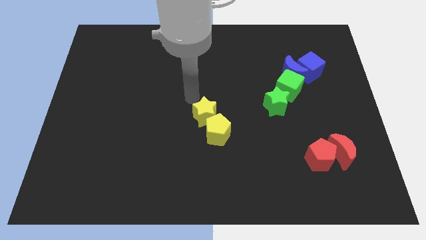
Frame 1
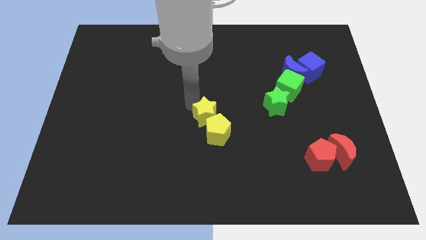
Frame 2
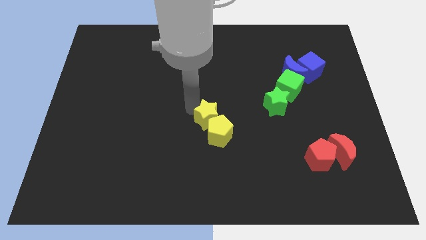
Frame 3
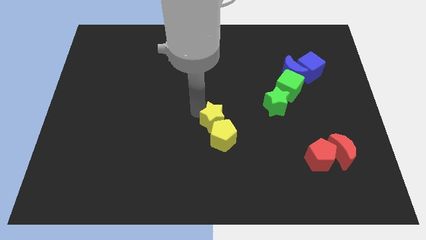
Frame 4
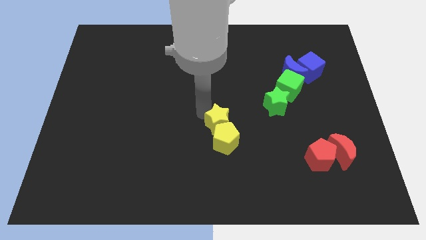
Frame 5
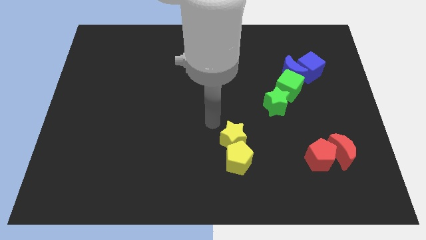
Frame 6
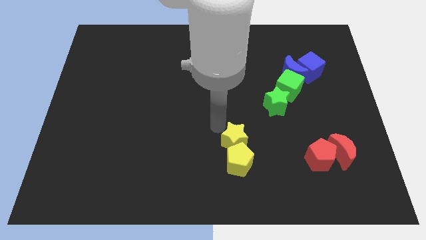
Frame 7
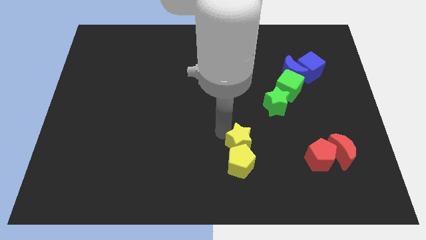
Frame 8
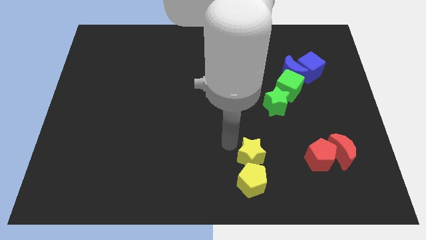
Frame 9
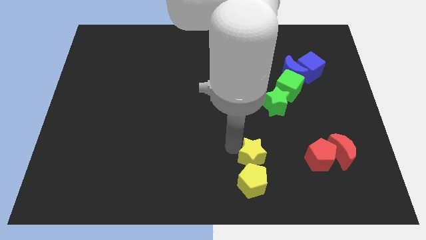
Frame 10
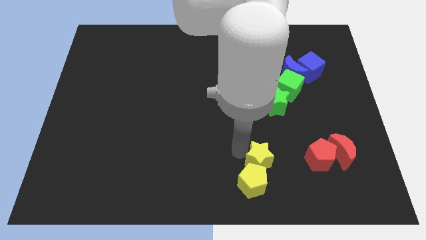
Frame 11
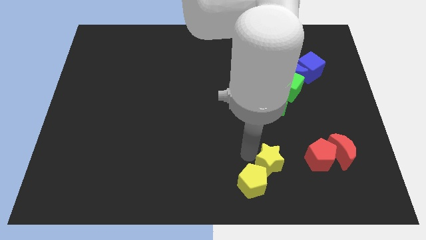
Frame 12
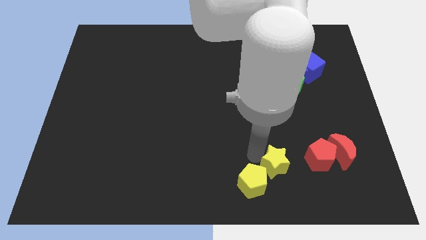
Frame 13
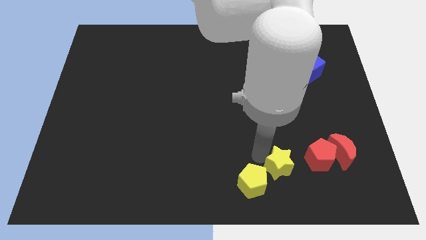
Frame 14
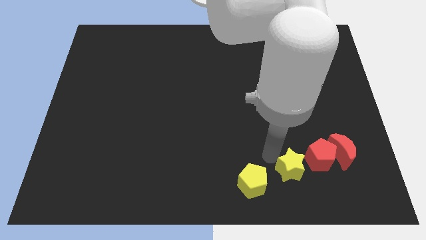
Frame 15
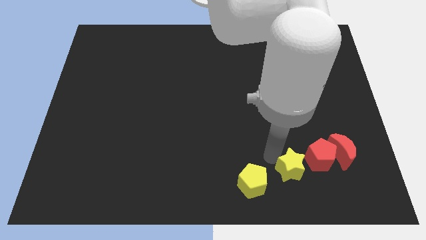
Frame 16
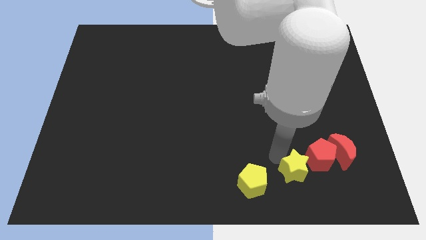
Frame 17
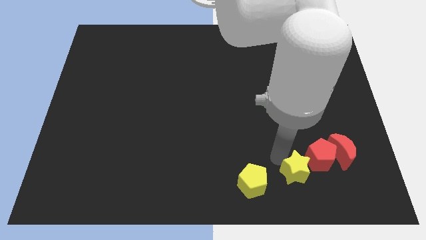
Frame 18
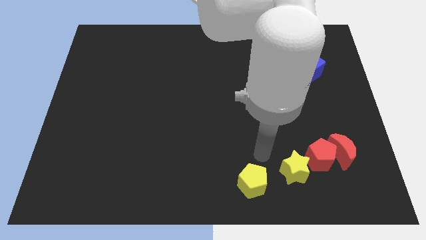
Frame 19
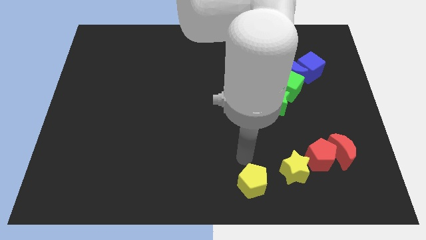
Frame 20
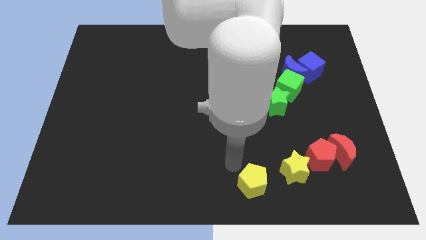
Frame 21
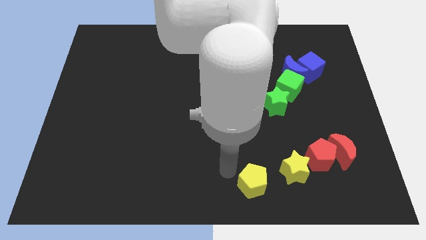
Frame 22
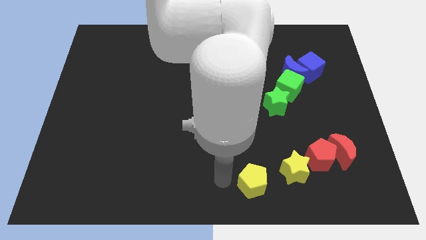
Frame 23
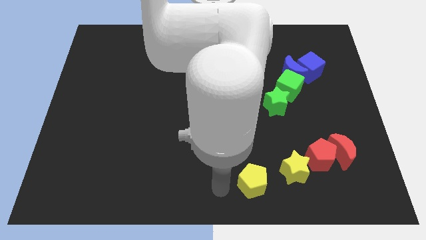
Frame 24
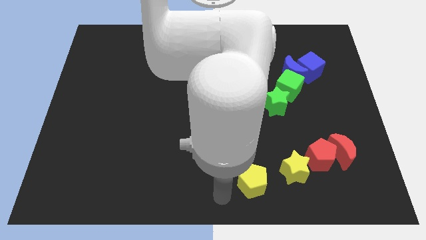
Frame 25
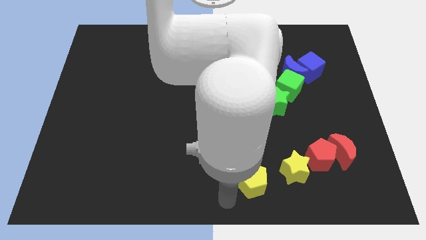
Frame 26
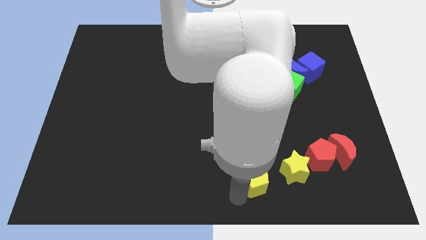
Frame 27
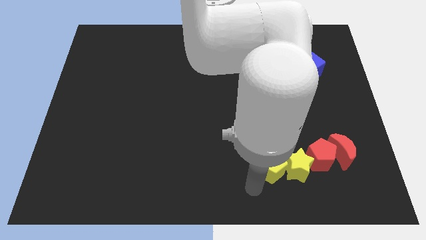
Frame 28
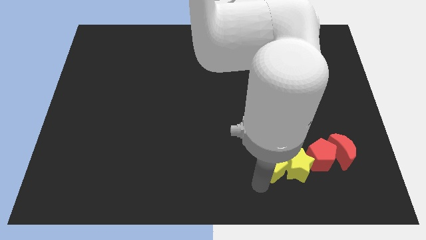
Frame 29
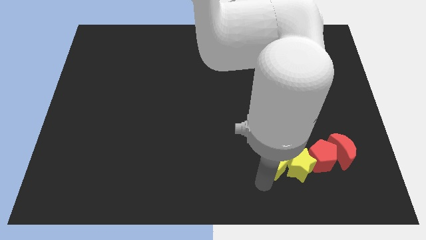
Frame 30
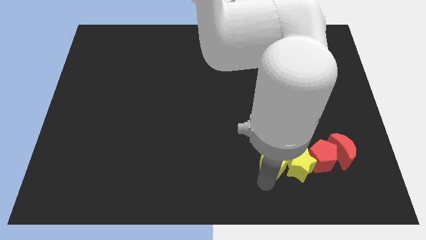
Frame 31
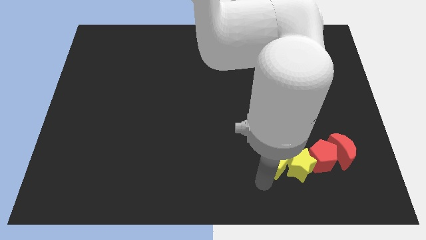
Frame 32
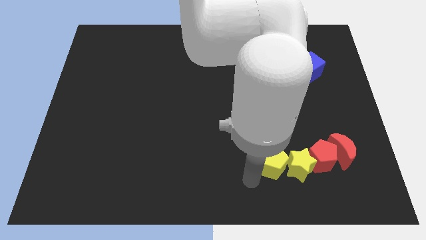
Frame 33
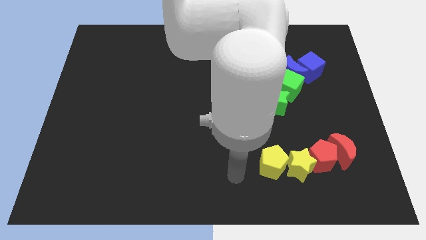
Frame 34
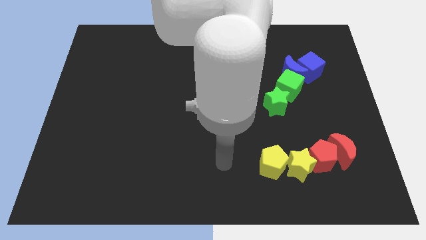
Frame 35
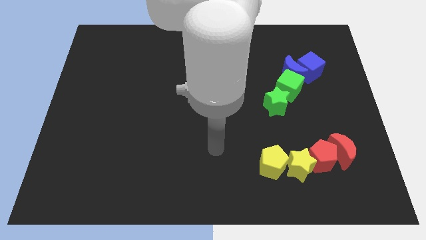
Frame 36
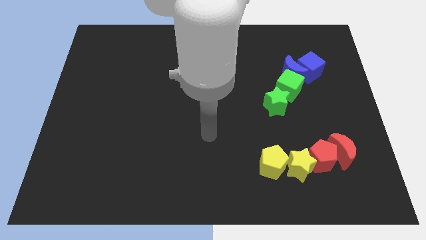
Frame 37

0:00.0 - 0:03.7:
place the yellow pentagon and yellow star to the left of red pentagon

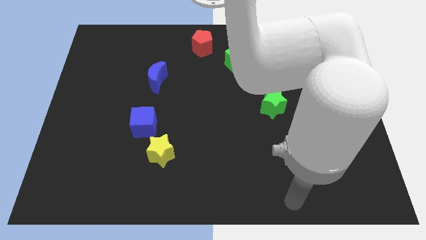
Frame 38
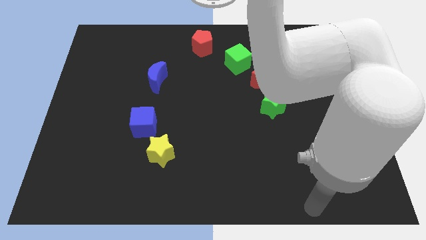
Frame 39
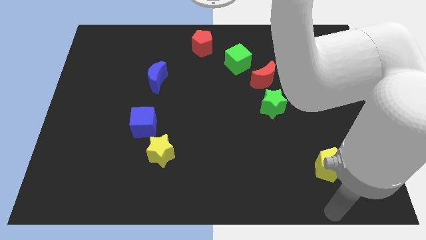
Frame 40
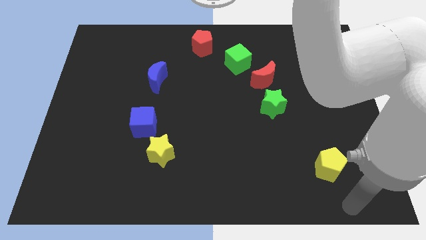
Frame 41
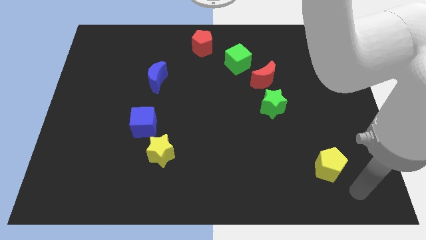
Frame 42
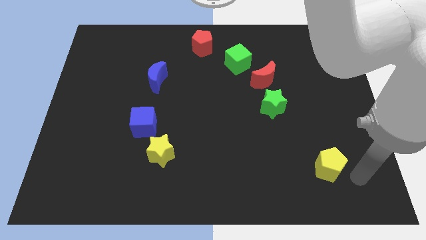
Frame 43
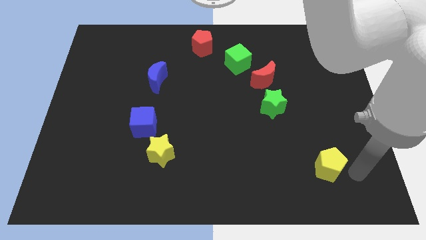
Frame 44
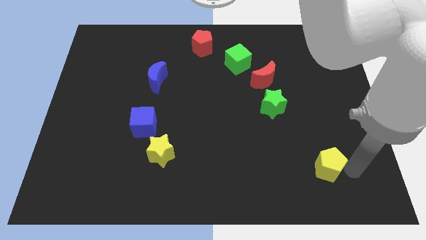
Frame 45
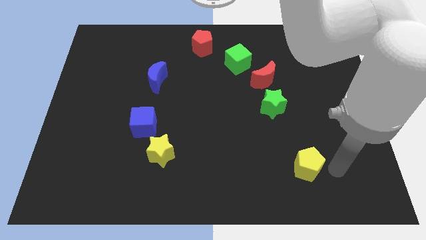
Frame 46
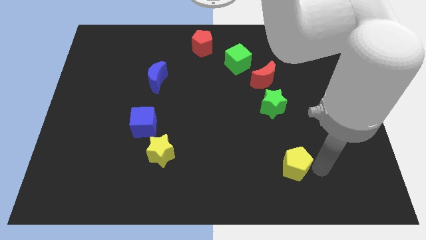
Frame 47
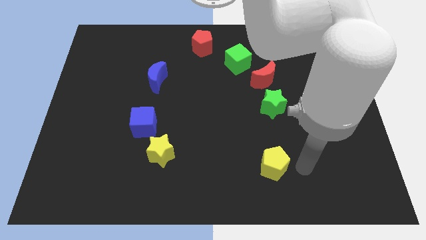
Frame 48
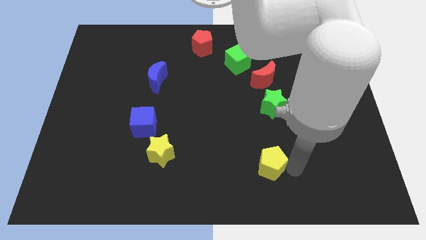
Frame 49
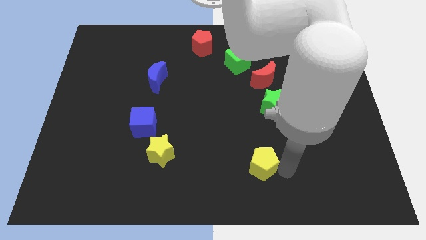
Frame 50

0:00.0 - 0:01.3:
push the yellow pentagon right to the yellow star

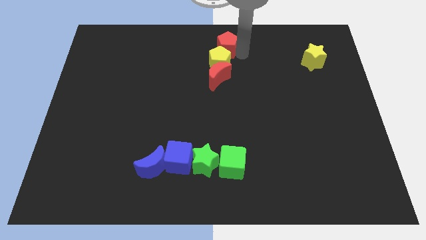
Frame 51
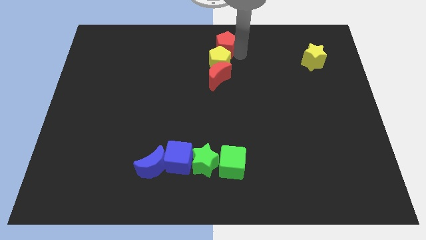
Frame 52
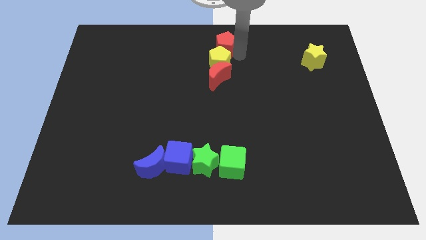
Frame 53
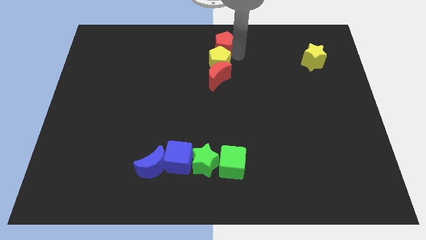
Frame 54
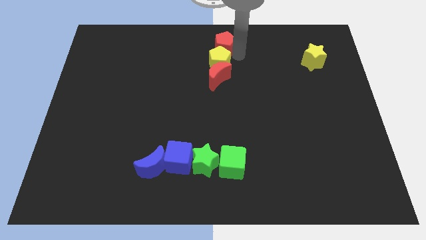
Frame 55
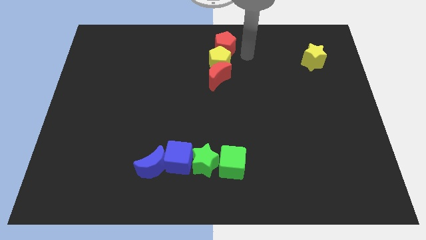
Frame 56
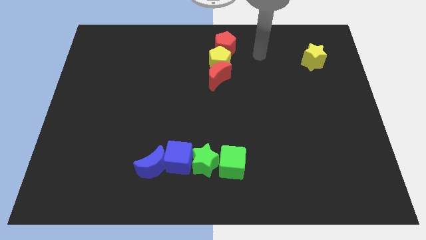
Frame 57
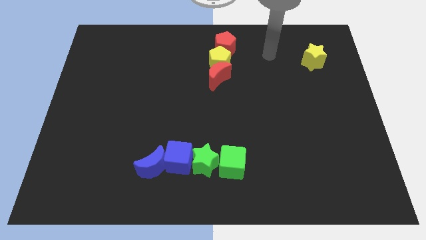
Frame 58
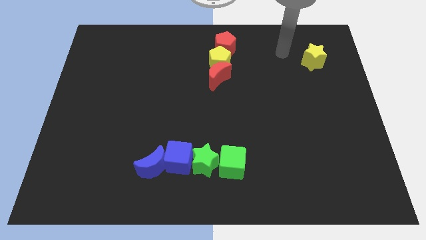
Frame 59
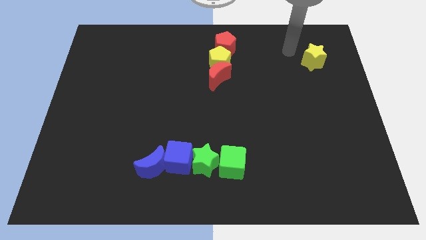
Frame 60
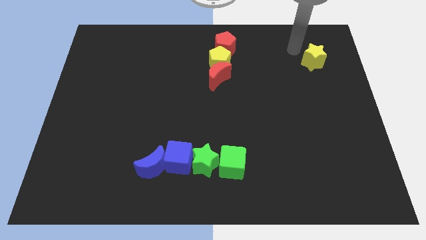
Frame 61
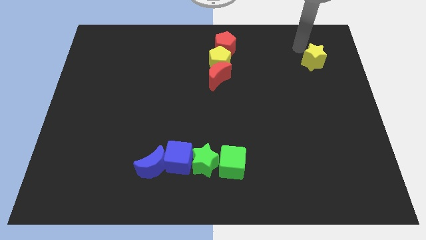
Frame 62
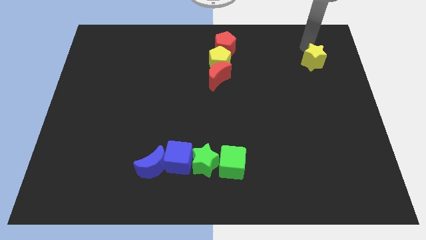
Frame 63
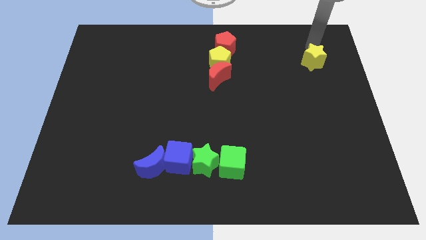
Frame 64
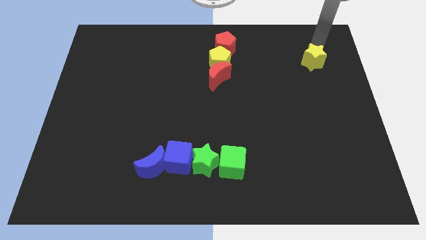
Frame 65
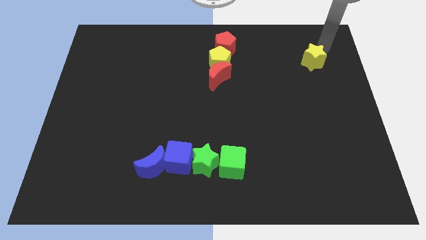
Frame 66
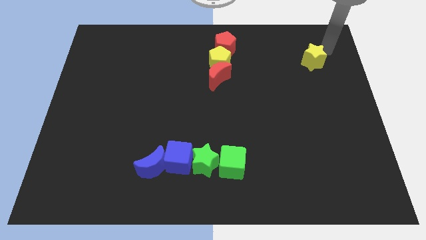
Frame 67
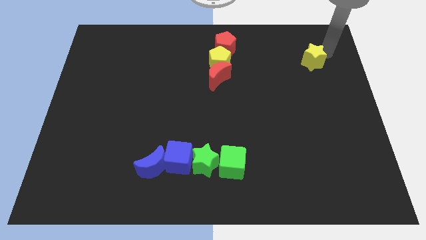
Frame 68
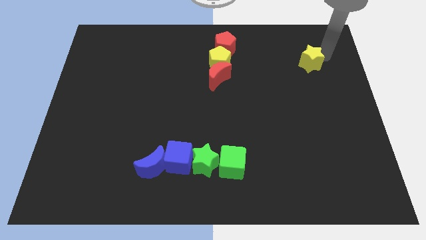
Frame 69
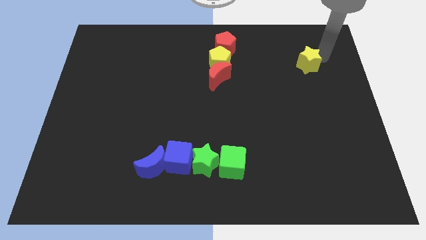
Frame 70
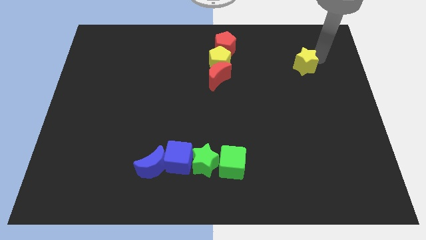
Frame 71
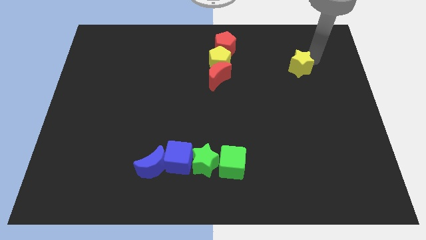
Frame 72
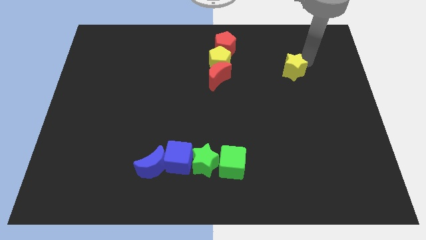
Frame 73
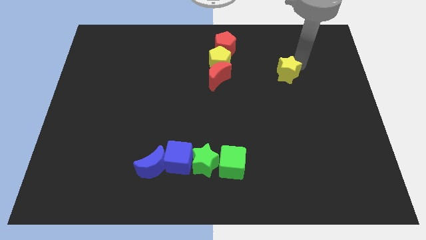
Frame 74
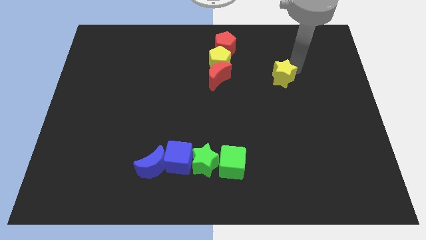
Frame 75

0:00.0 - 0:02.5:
move the yellow star to the right of the red crescent

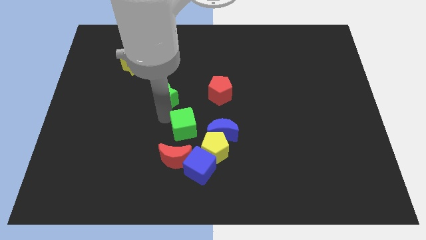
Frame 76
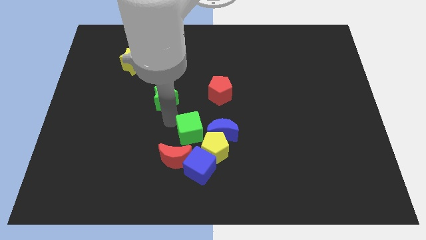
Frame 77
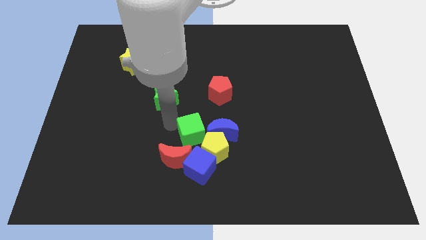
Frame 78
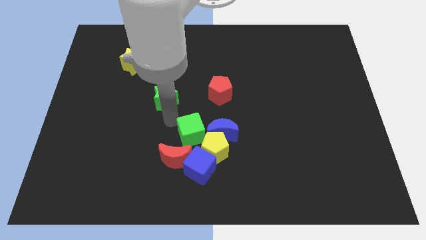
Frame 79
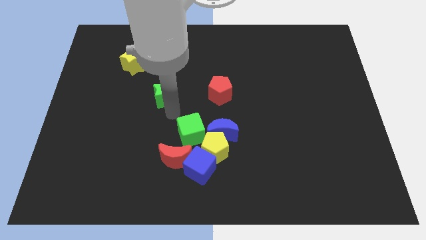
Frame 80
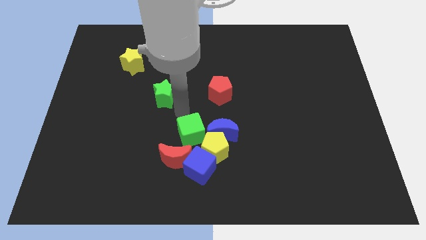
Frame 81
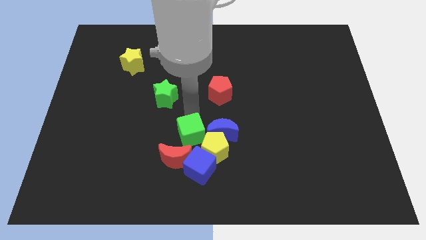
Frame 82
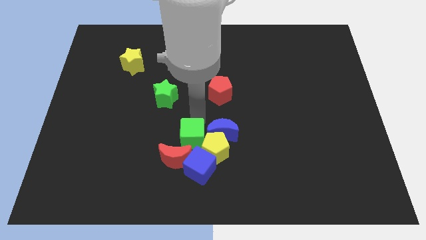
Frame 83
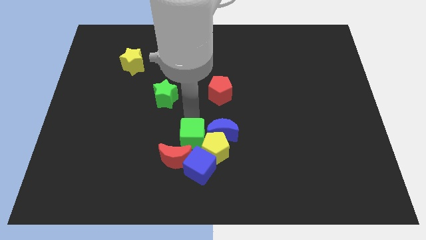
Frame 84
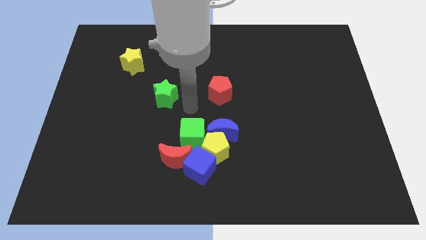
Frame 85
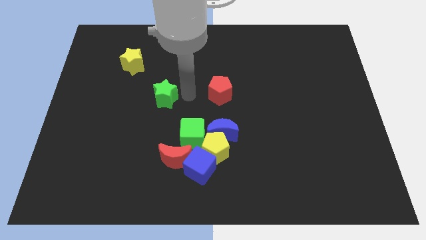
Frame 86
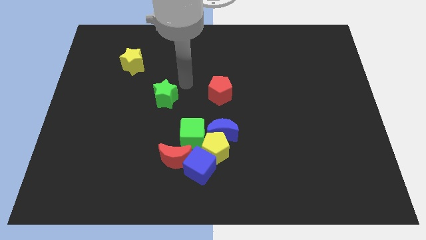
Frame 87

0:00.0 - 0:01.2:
push the green cube left to the yellow pentagon
